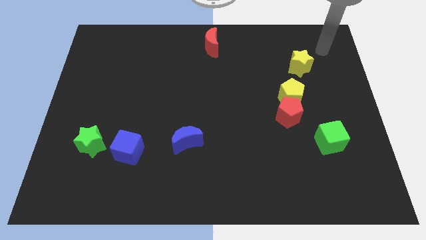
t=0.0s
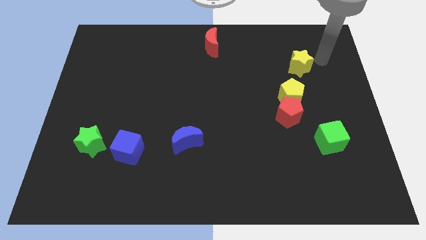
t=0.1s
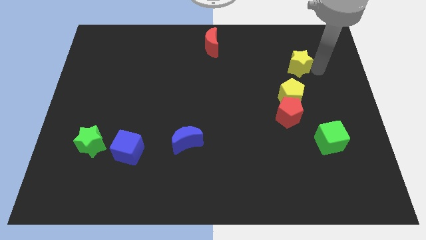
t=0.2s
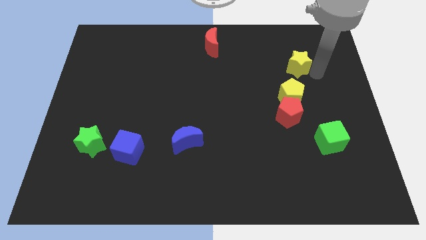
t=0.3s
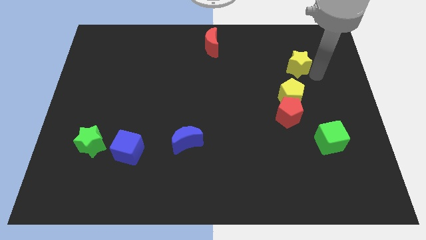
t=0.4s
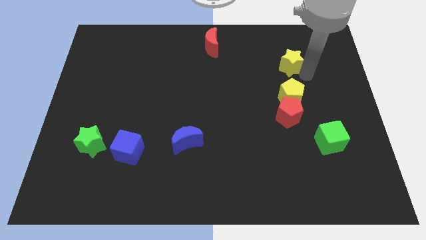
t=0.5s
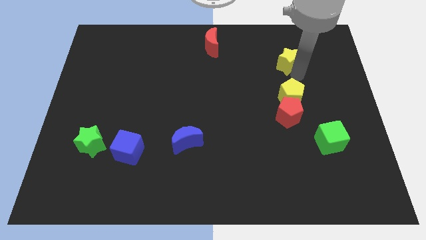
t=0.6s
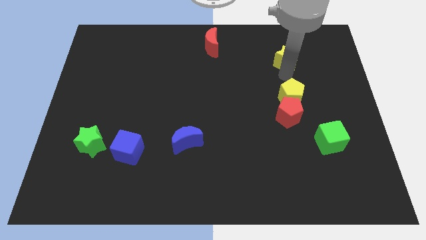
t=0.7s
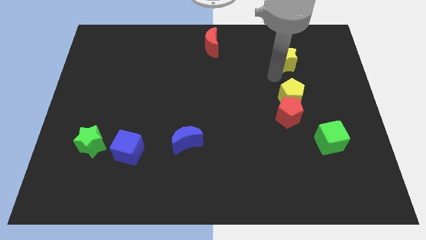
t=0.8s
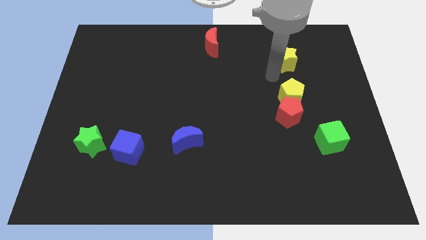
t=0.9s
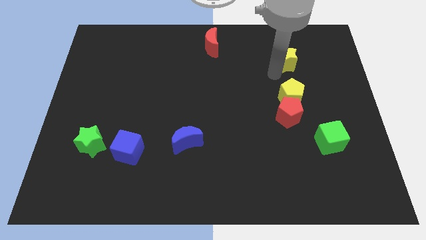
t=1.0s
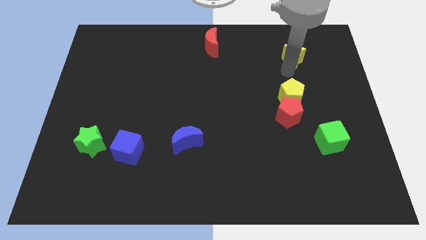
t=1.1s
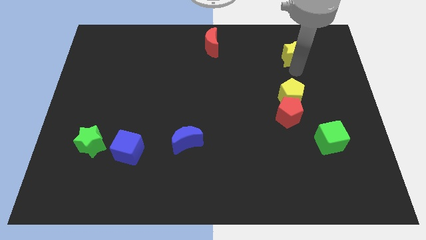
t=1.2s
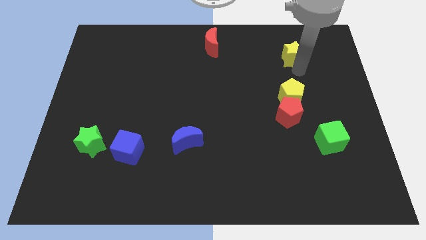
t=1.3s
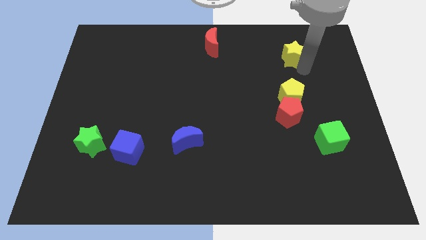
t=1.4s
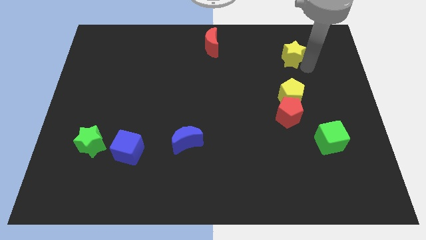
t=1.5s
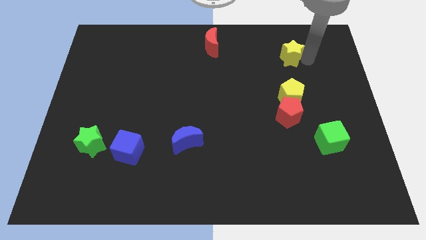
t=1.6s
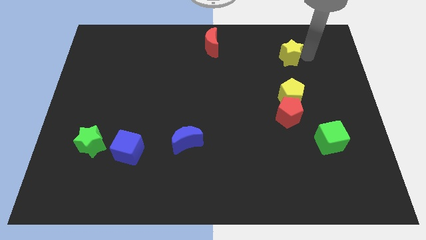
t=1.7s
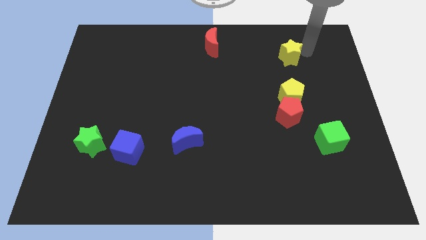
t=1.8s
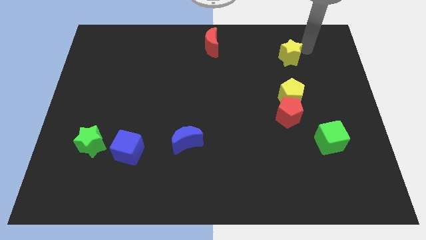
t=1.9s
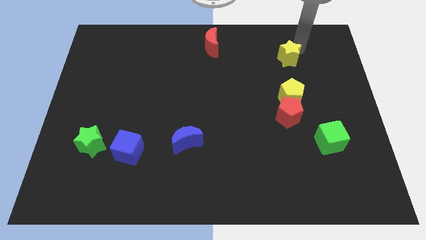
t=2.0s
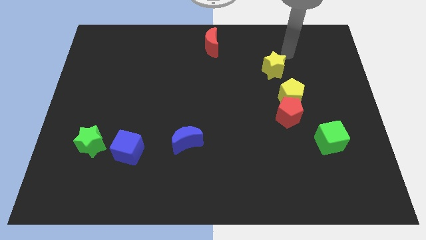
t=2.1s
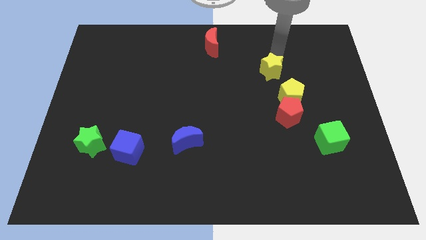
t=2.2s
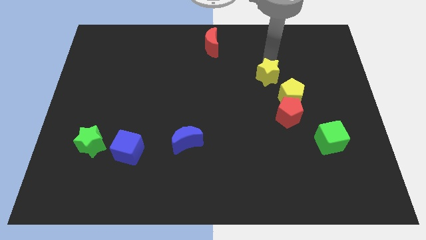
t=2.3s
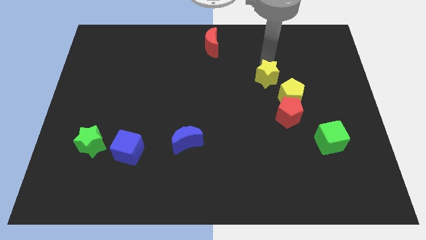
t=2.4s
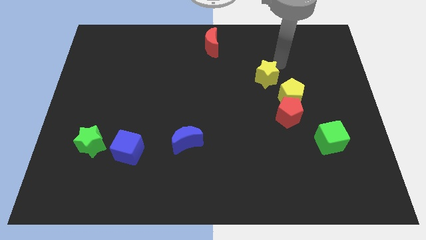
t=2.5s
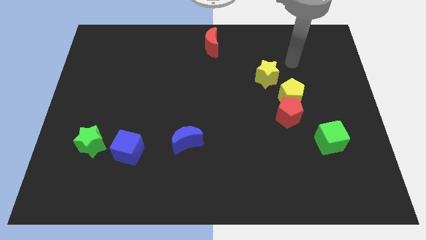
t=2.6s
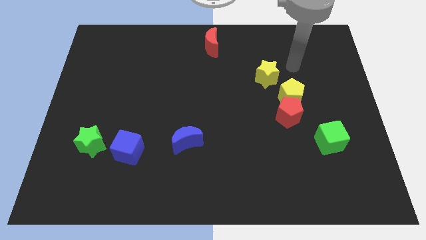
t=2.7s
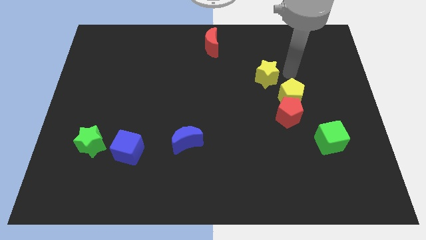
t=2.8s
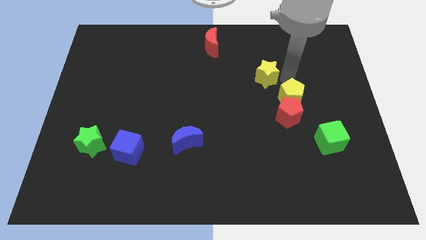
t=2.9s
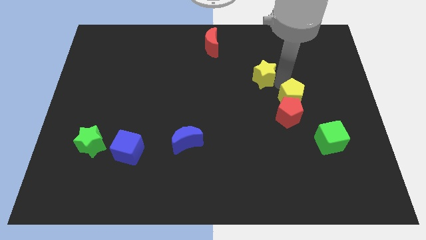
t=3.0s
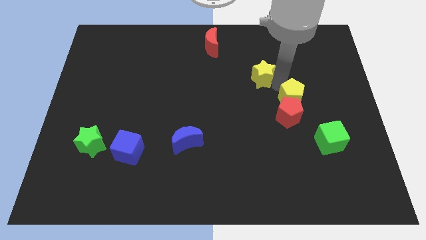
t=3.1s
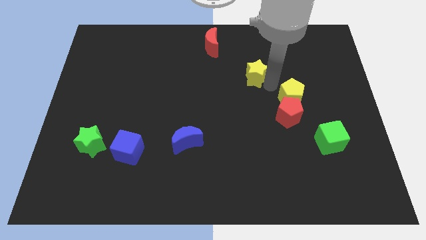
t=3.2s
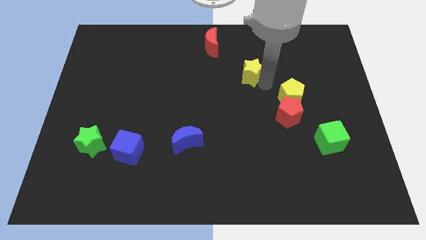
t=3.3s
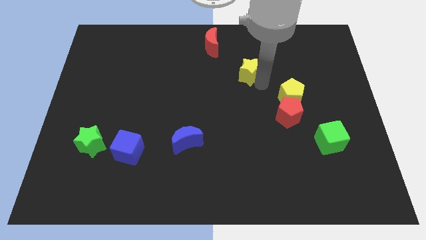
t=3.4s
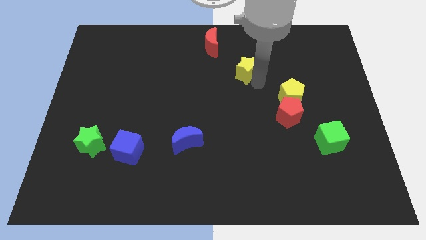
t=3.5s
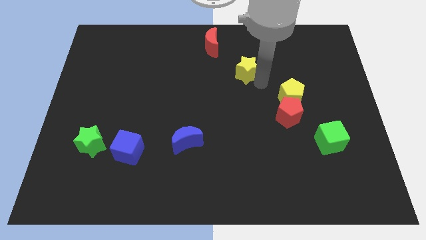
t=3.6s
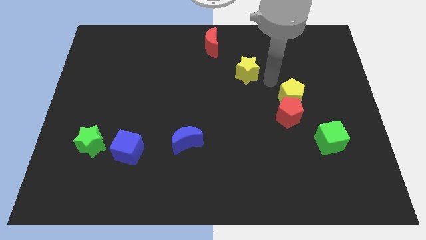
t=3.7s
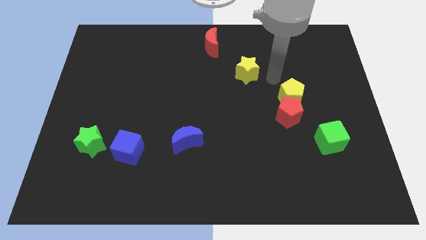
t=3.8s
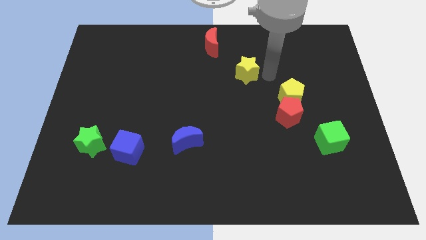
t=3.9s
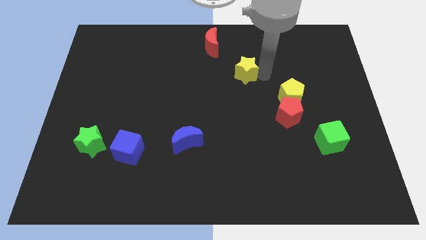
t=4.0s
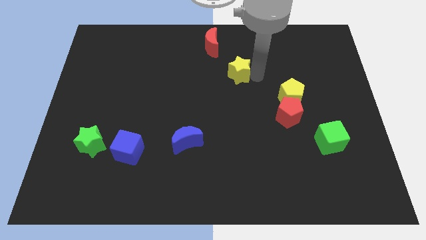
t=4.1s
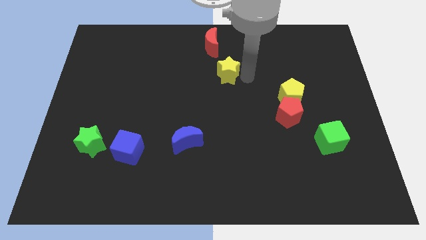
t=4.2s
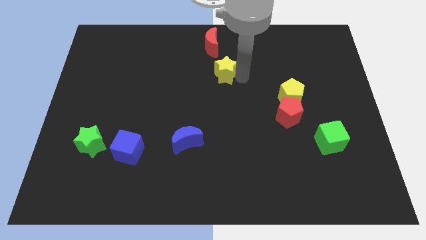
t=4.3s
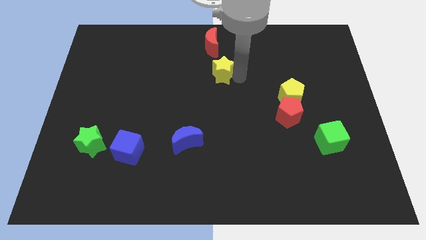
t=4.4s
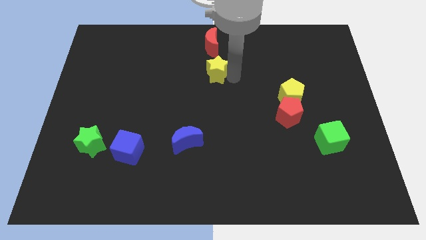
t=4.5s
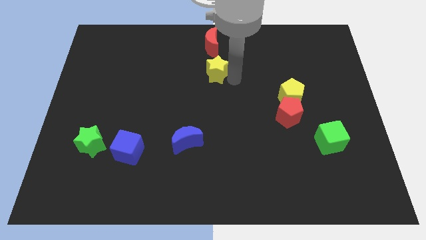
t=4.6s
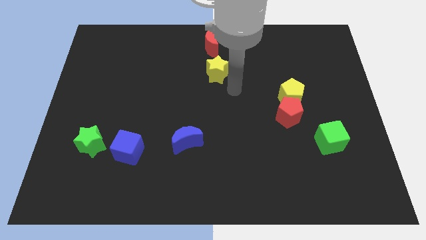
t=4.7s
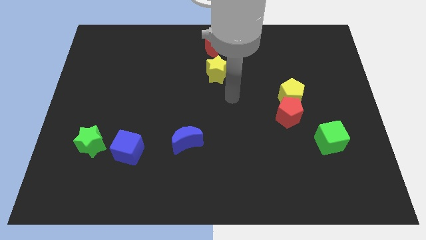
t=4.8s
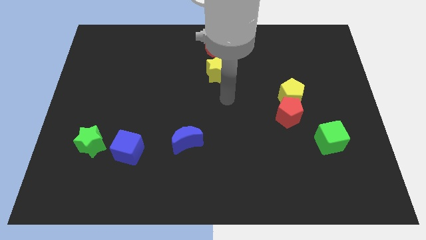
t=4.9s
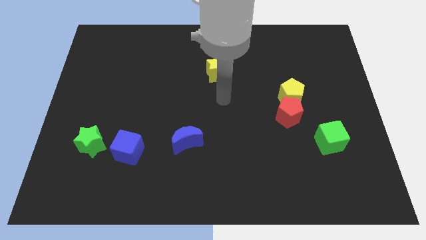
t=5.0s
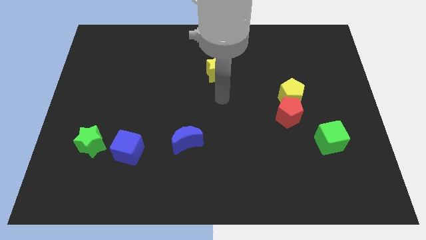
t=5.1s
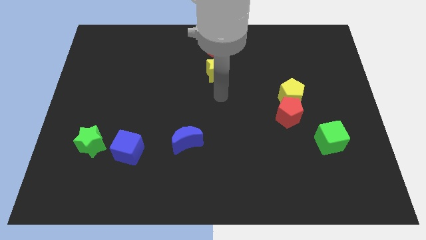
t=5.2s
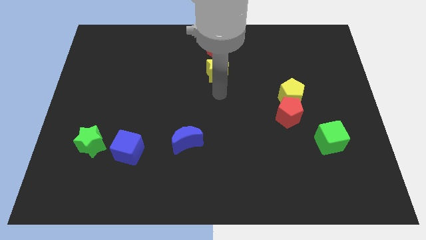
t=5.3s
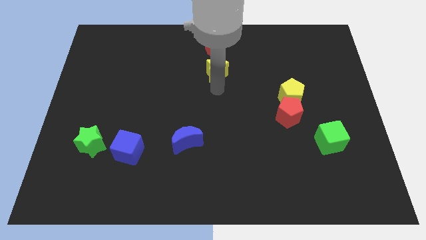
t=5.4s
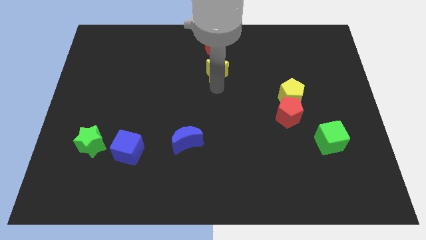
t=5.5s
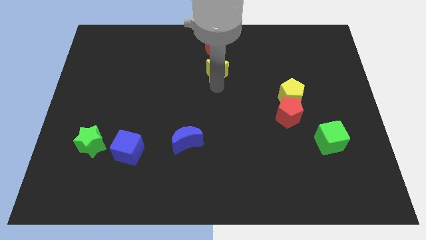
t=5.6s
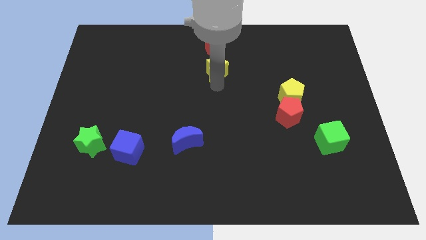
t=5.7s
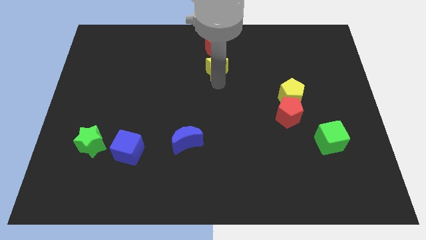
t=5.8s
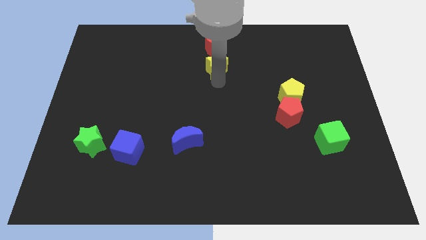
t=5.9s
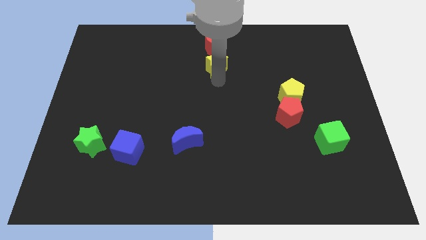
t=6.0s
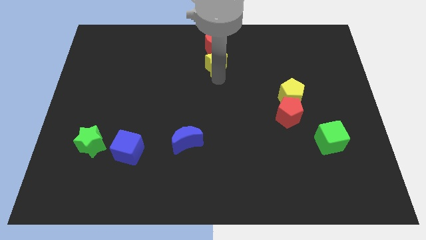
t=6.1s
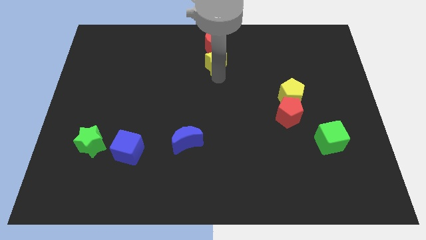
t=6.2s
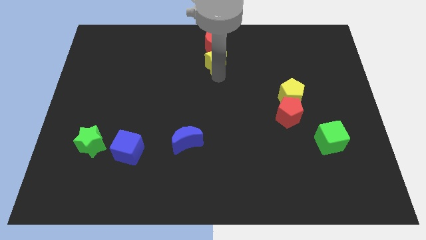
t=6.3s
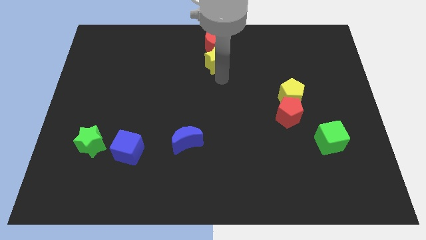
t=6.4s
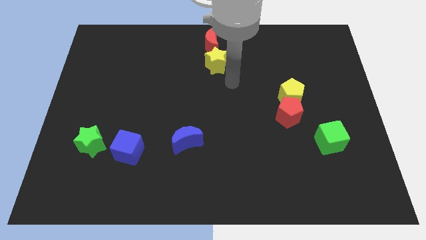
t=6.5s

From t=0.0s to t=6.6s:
push the yellow star to the bottom side of the red moon

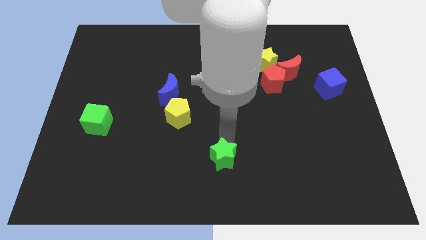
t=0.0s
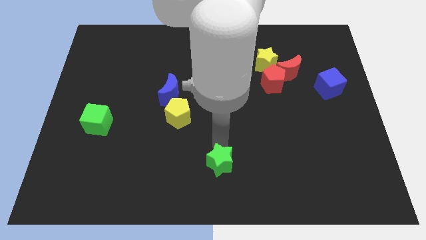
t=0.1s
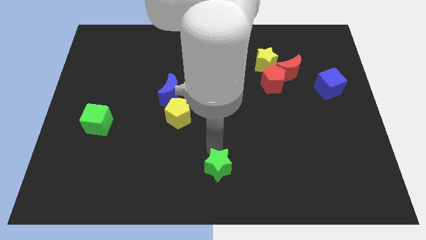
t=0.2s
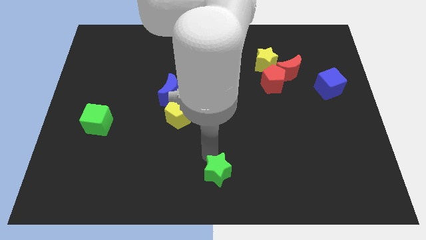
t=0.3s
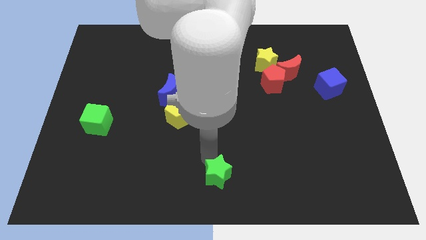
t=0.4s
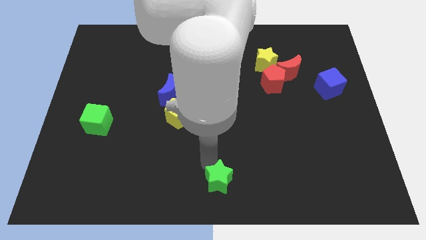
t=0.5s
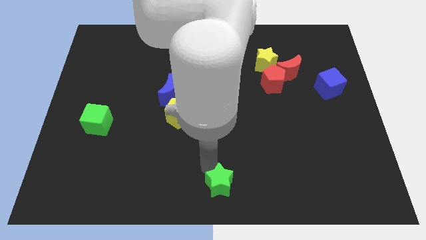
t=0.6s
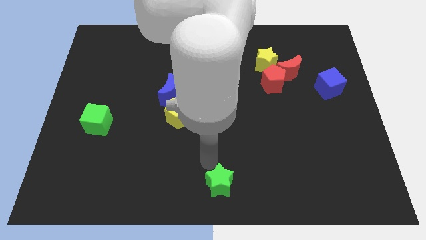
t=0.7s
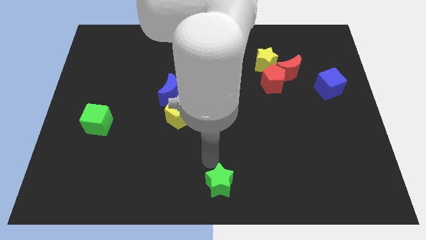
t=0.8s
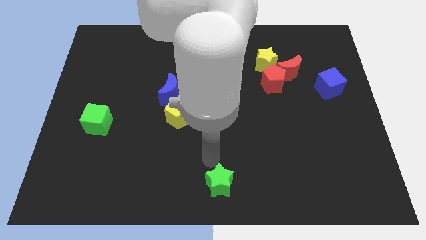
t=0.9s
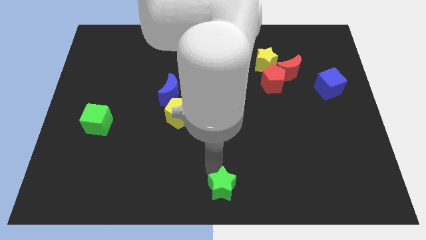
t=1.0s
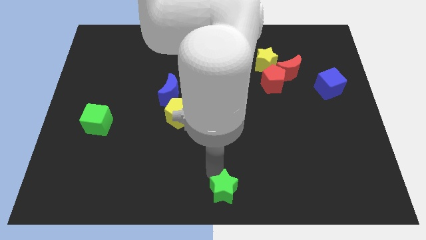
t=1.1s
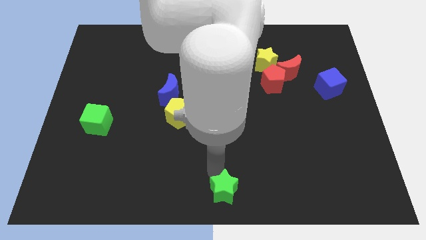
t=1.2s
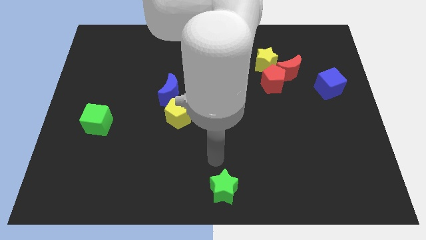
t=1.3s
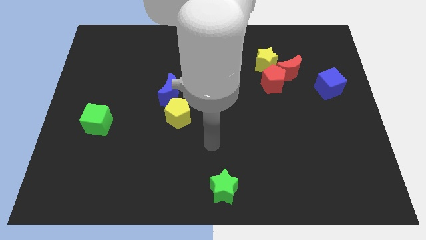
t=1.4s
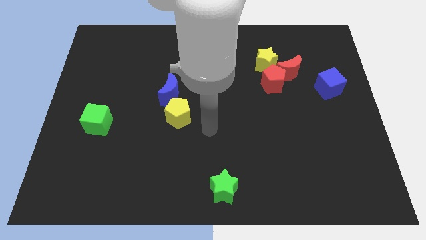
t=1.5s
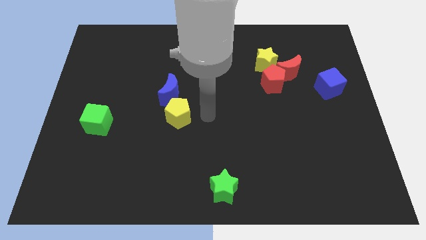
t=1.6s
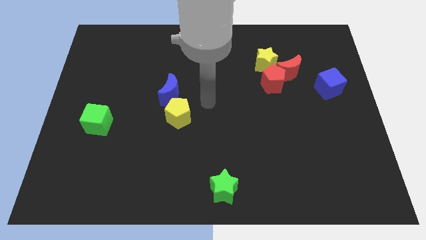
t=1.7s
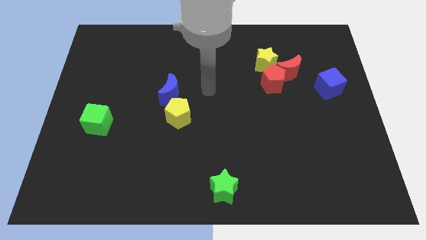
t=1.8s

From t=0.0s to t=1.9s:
push the green star to the bottom center

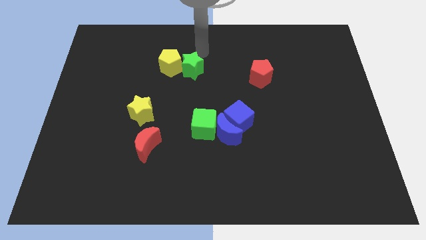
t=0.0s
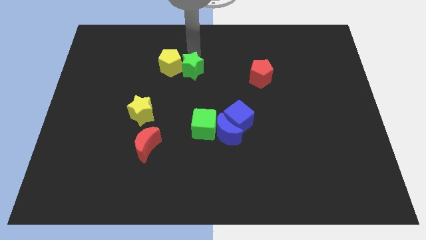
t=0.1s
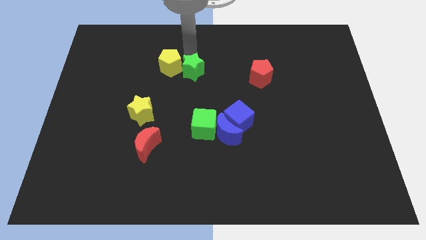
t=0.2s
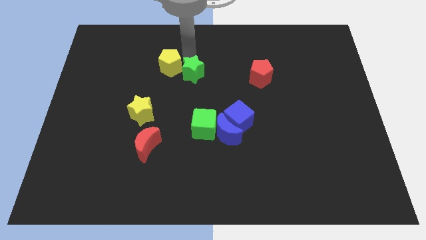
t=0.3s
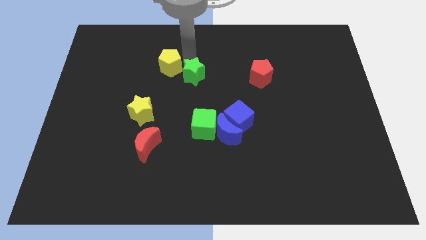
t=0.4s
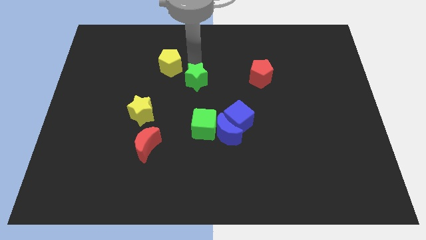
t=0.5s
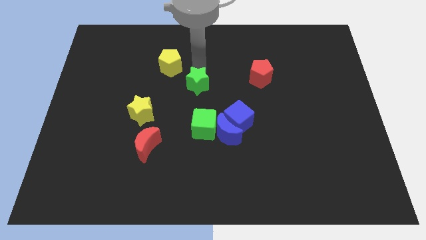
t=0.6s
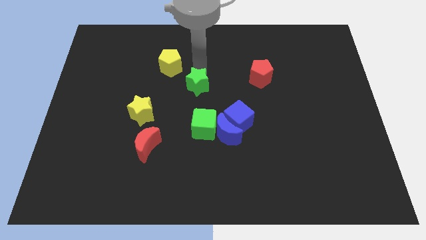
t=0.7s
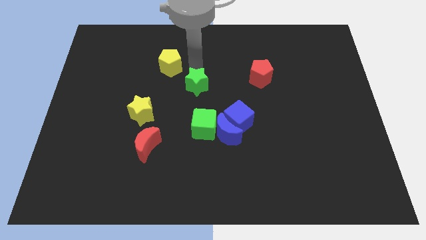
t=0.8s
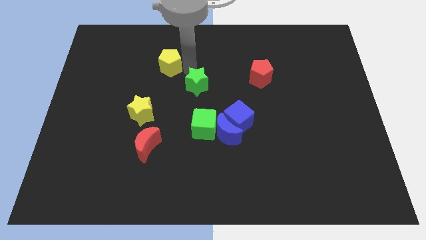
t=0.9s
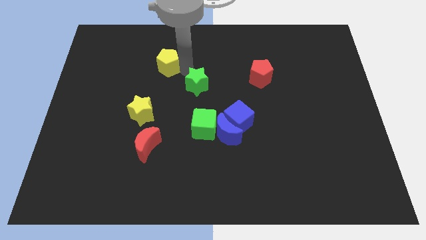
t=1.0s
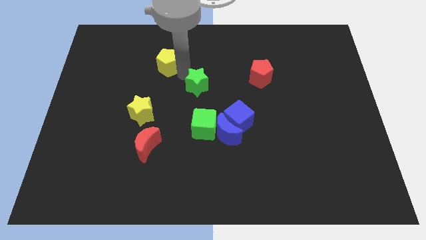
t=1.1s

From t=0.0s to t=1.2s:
separate the green star from the yellow pentagon
